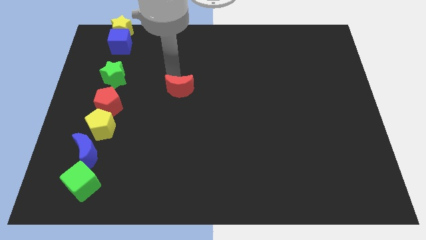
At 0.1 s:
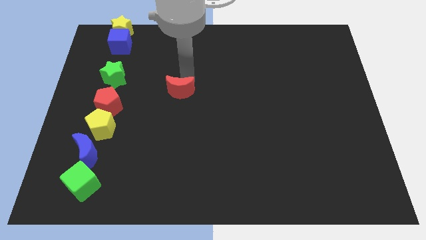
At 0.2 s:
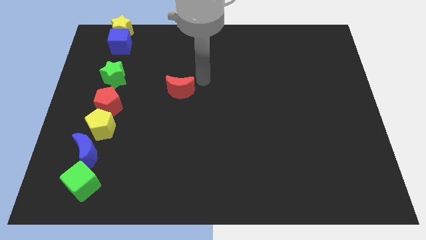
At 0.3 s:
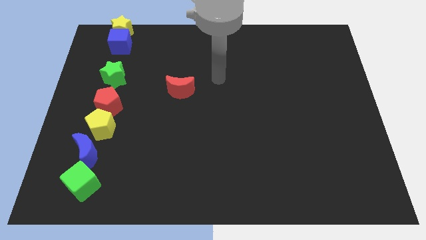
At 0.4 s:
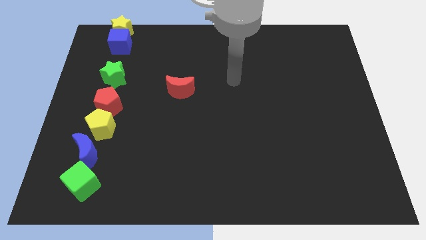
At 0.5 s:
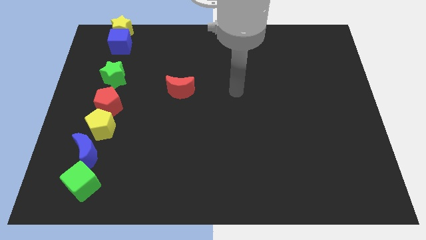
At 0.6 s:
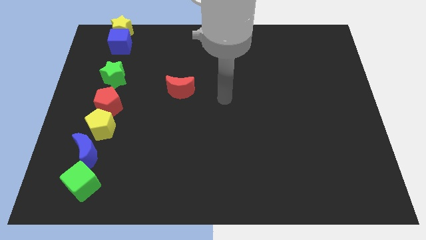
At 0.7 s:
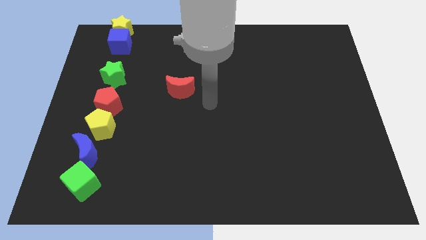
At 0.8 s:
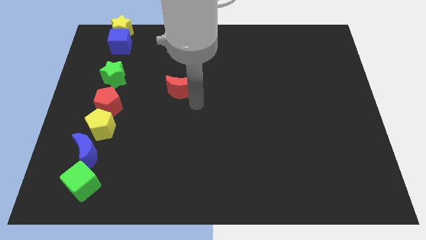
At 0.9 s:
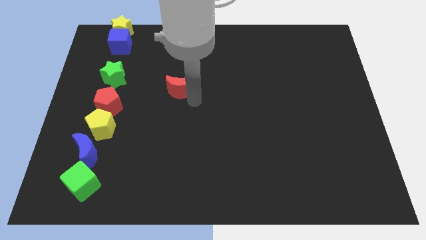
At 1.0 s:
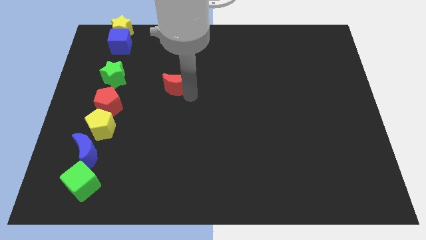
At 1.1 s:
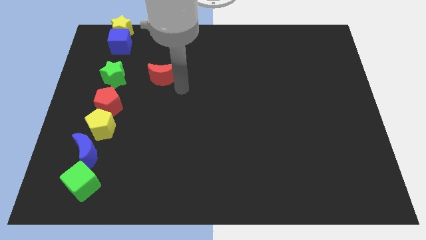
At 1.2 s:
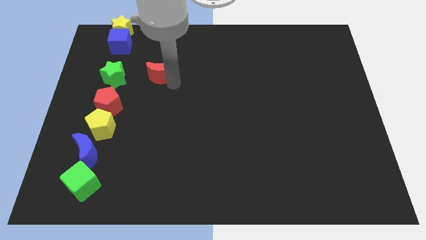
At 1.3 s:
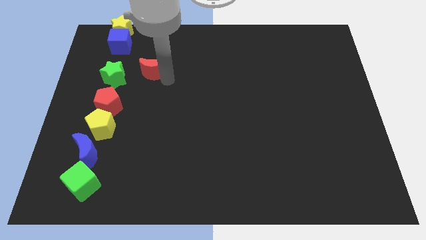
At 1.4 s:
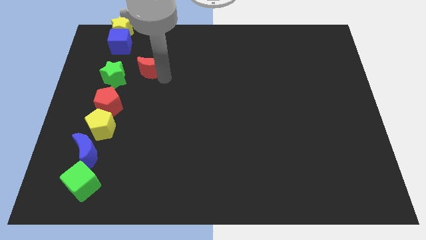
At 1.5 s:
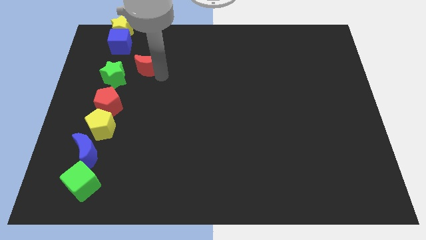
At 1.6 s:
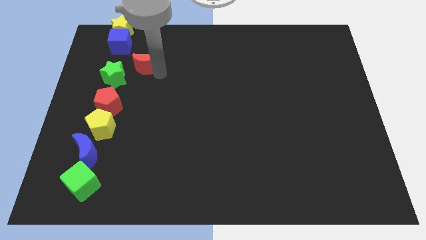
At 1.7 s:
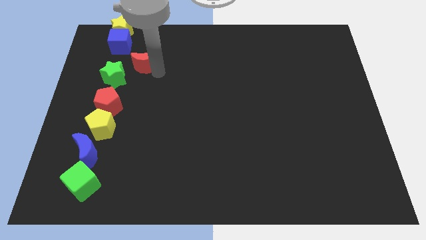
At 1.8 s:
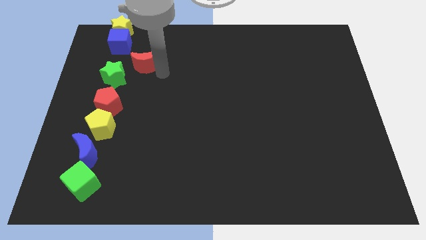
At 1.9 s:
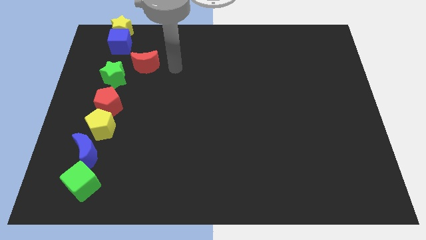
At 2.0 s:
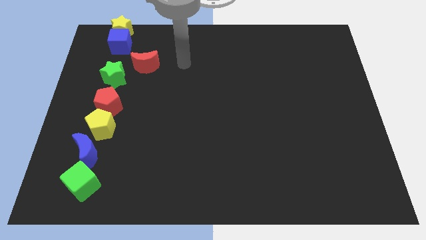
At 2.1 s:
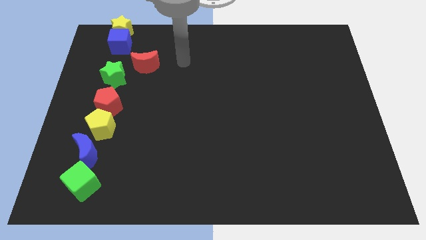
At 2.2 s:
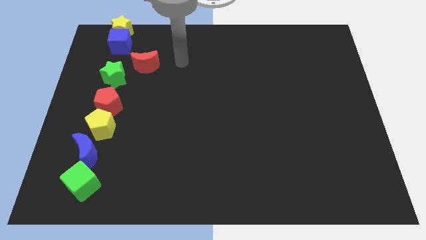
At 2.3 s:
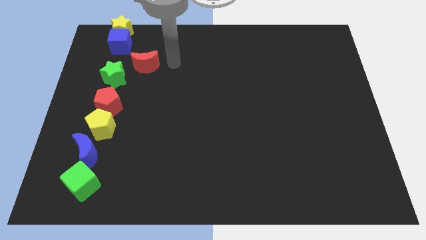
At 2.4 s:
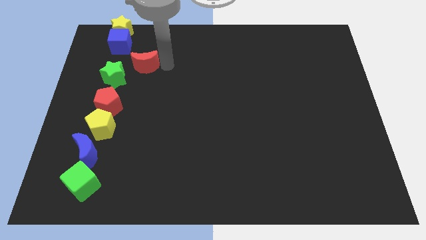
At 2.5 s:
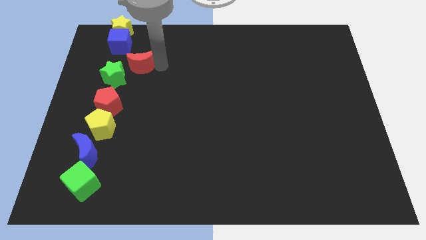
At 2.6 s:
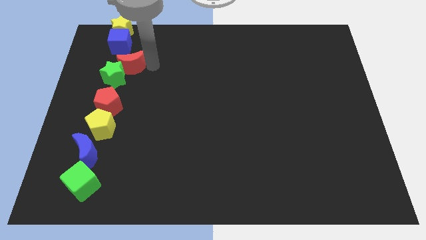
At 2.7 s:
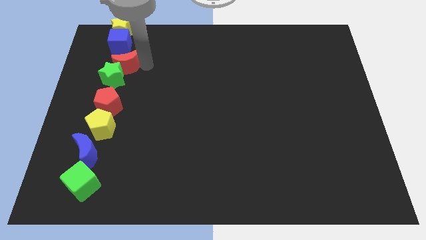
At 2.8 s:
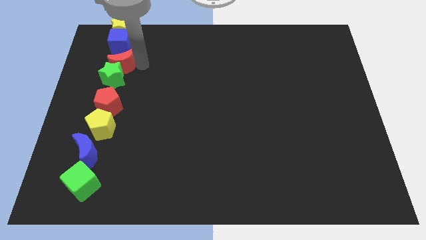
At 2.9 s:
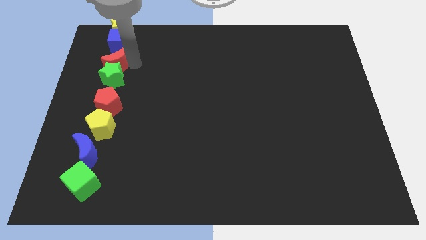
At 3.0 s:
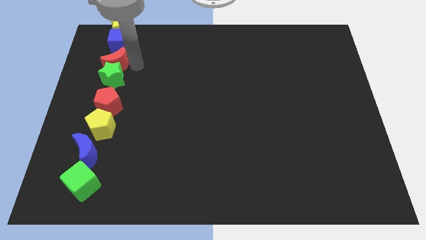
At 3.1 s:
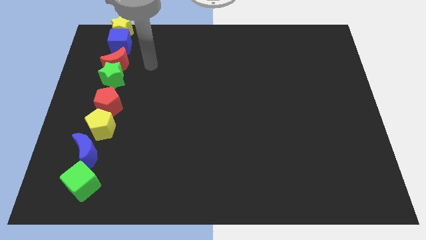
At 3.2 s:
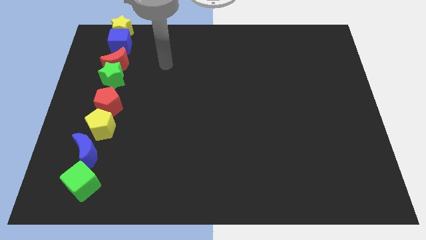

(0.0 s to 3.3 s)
move the red moon above the green star

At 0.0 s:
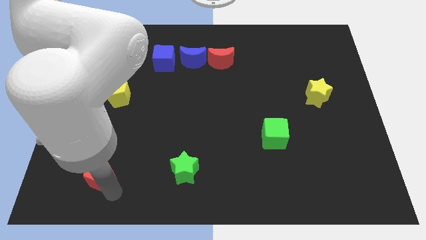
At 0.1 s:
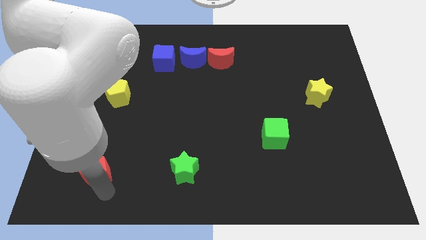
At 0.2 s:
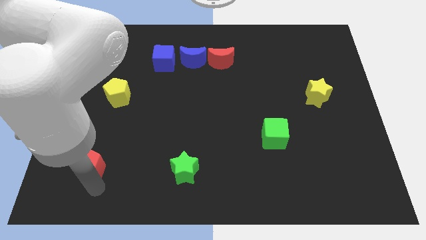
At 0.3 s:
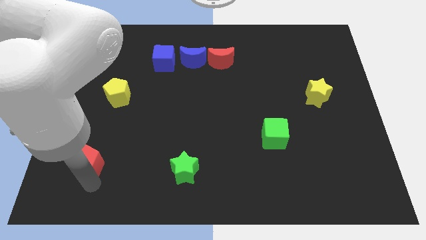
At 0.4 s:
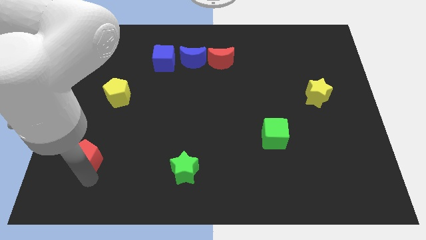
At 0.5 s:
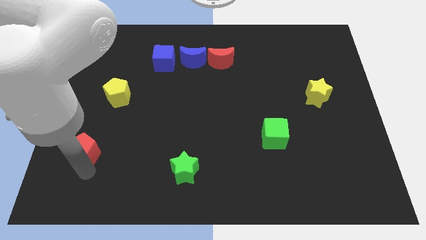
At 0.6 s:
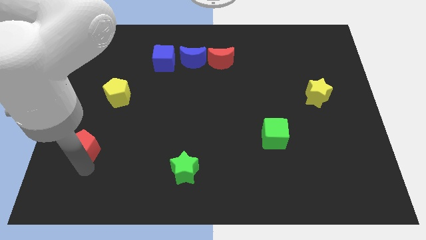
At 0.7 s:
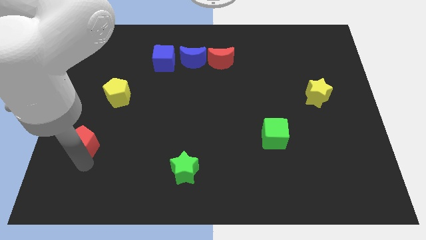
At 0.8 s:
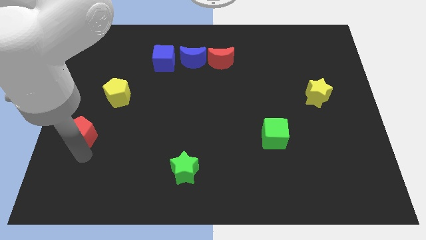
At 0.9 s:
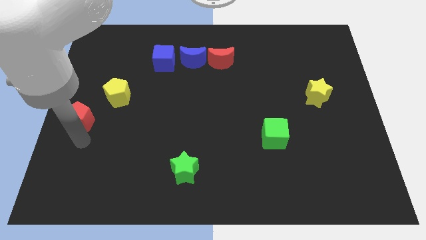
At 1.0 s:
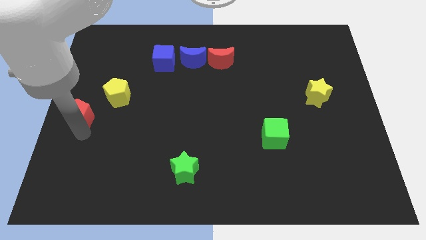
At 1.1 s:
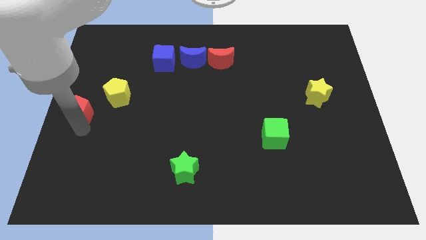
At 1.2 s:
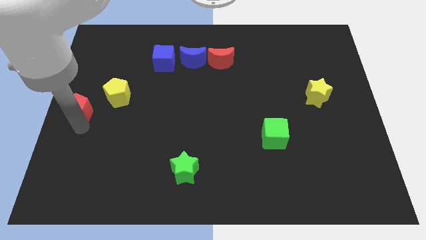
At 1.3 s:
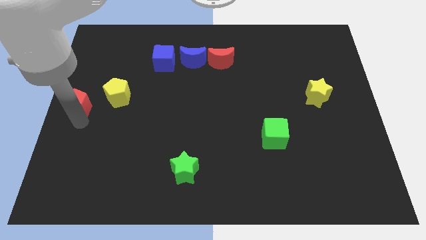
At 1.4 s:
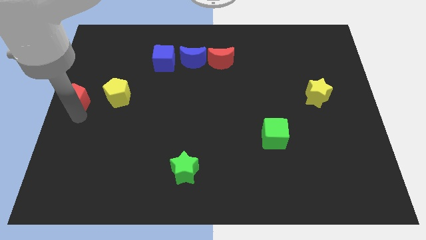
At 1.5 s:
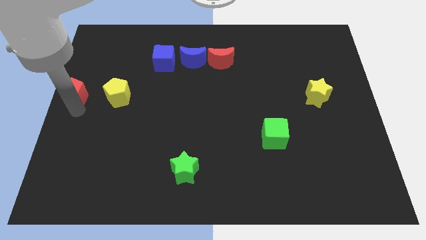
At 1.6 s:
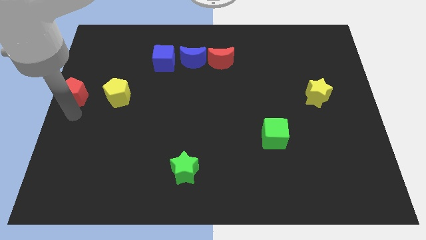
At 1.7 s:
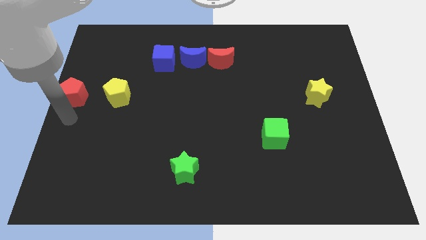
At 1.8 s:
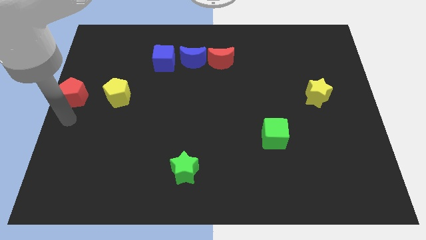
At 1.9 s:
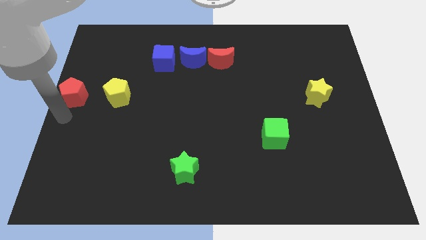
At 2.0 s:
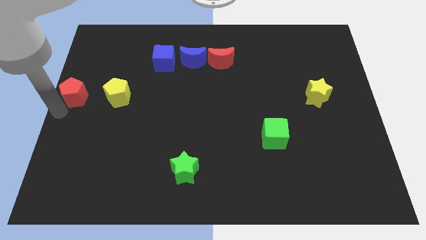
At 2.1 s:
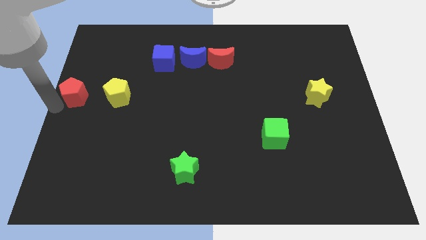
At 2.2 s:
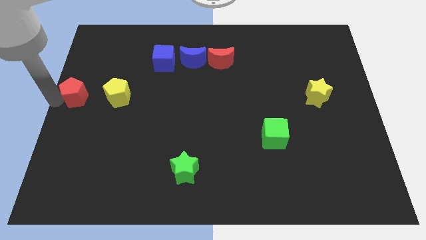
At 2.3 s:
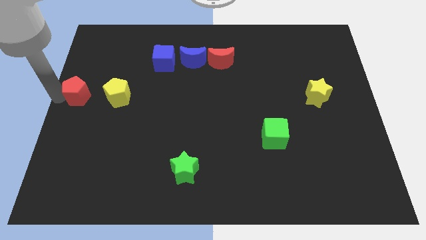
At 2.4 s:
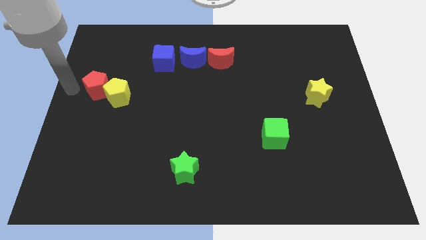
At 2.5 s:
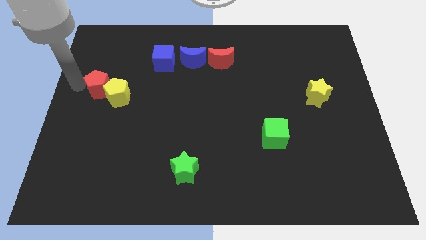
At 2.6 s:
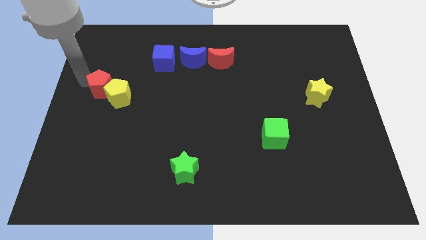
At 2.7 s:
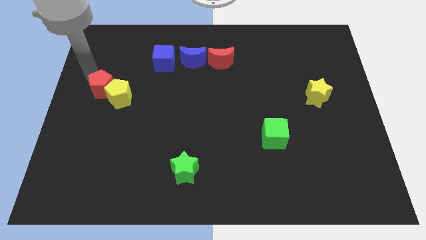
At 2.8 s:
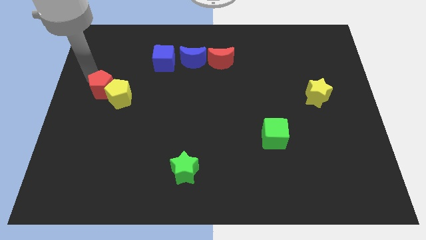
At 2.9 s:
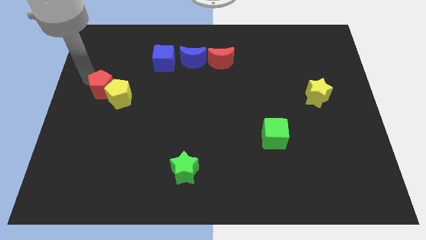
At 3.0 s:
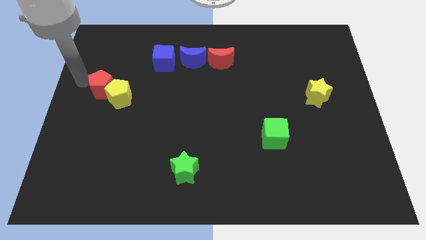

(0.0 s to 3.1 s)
move the red pentagon into the yellow pentagon

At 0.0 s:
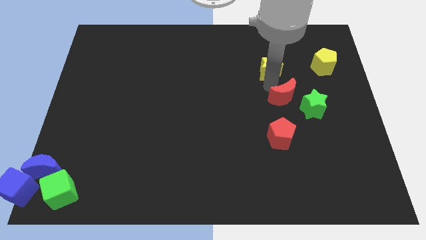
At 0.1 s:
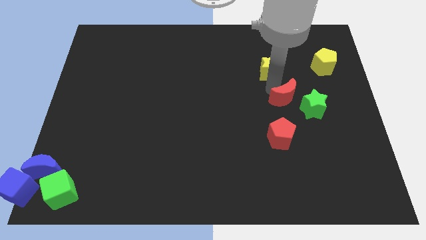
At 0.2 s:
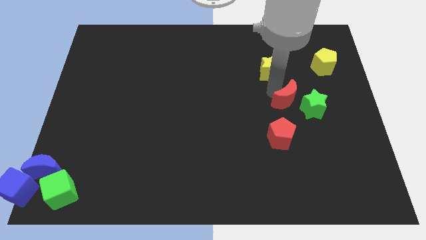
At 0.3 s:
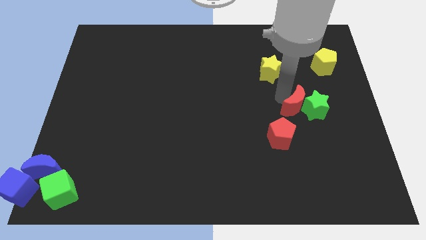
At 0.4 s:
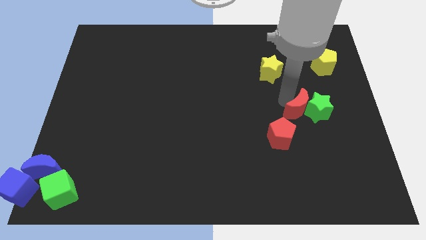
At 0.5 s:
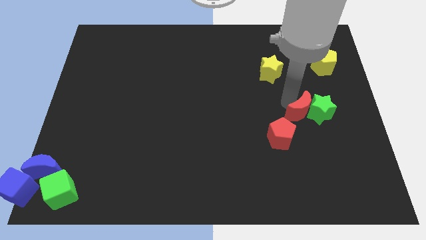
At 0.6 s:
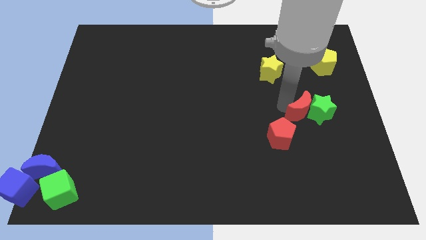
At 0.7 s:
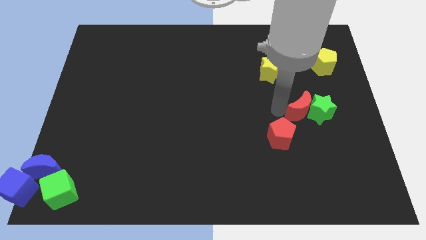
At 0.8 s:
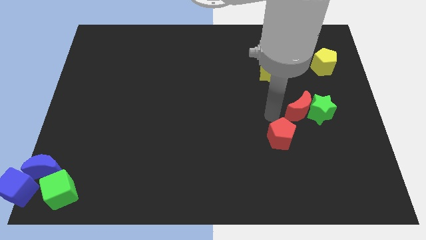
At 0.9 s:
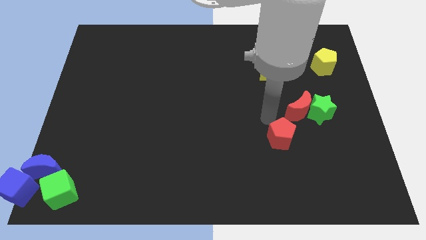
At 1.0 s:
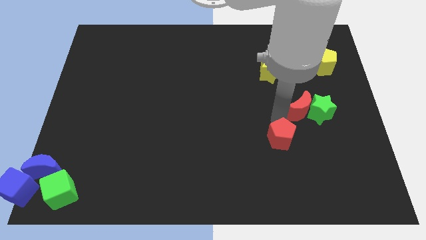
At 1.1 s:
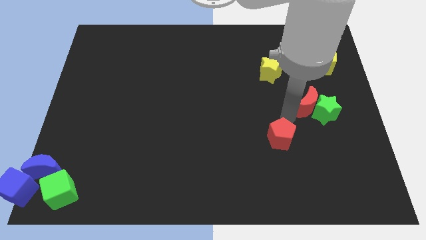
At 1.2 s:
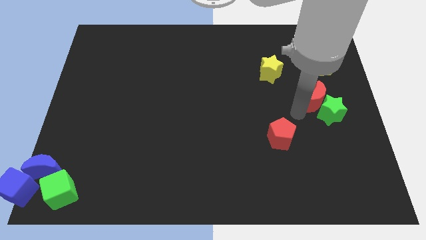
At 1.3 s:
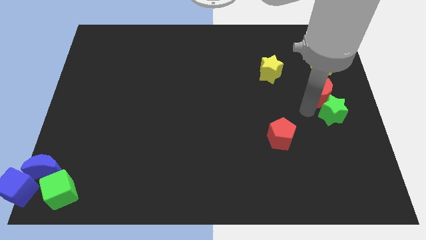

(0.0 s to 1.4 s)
slightly push the red moon into the green star

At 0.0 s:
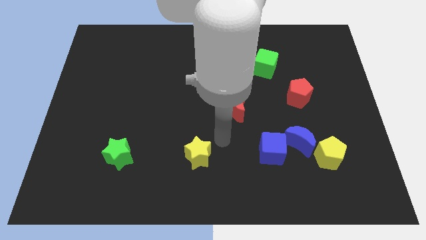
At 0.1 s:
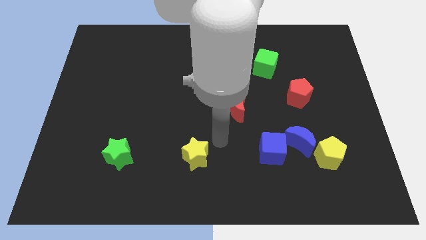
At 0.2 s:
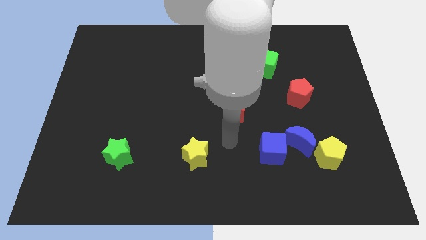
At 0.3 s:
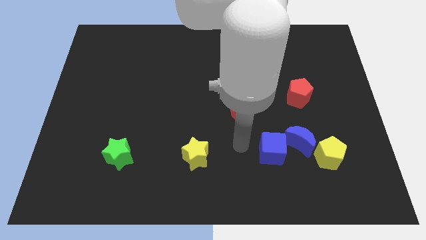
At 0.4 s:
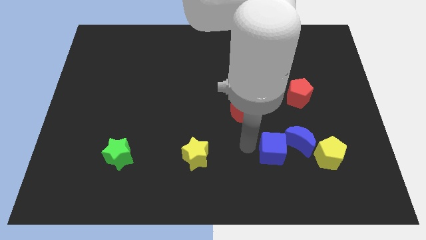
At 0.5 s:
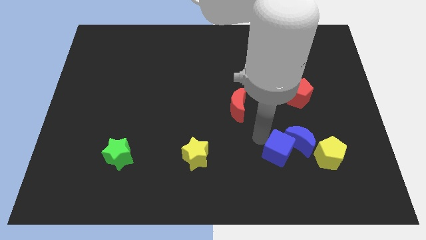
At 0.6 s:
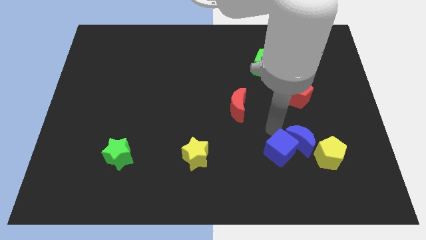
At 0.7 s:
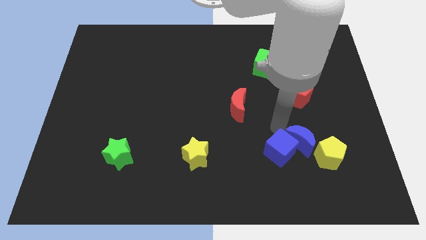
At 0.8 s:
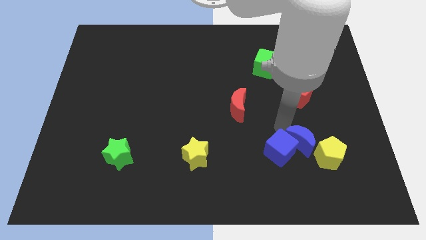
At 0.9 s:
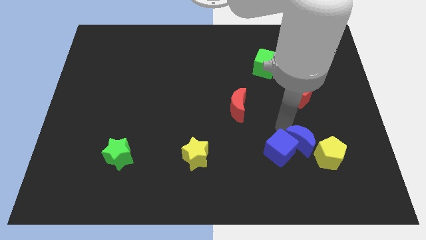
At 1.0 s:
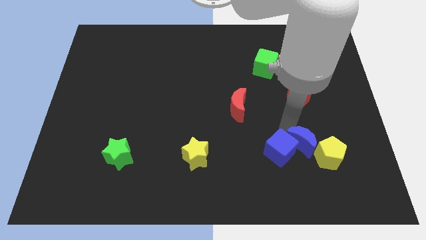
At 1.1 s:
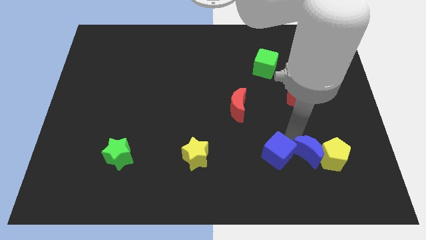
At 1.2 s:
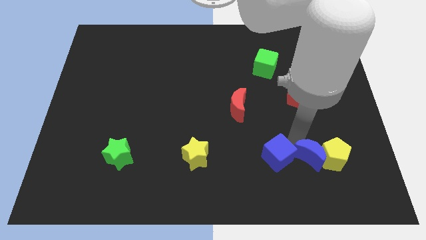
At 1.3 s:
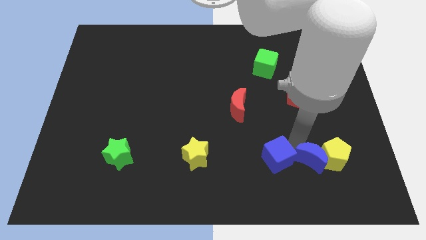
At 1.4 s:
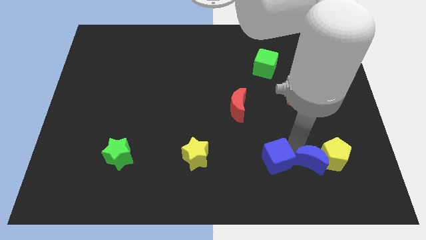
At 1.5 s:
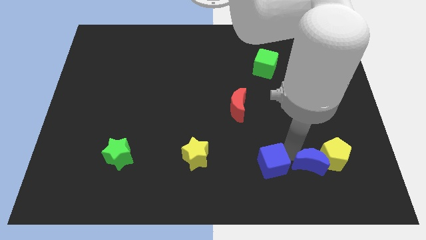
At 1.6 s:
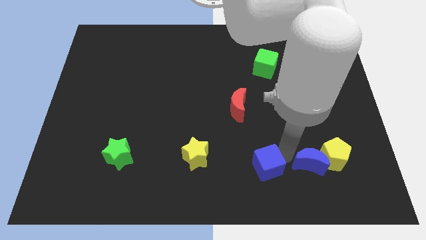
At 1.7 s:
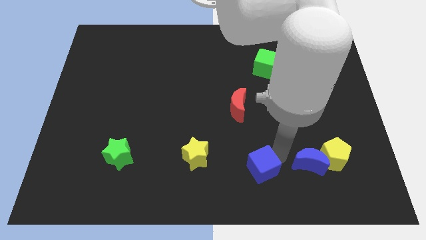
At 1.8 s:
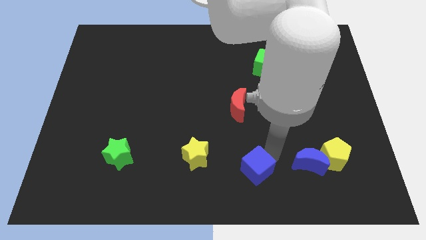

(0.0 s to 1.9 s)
separate the blue cube from the blue moon
